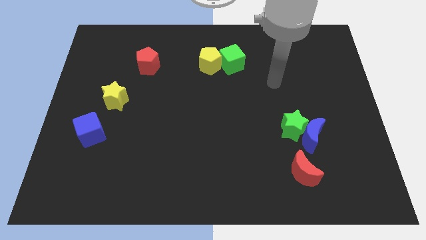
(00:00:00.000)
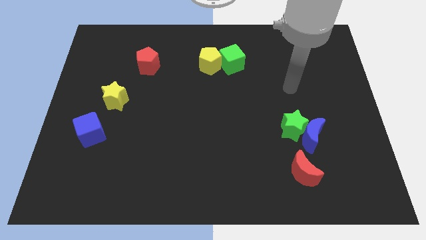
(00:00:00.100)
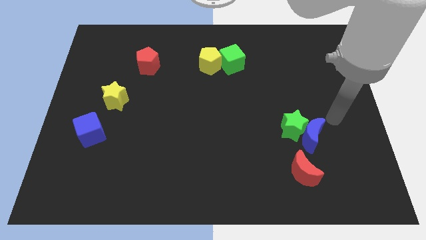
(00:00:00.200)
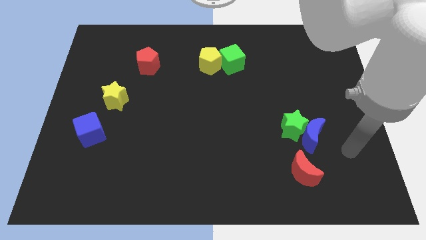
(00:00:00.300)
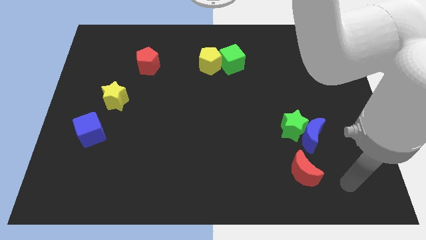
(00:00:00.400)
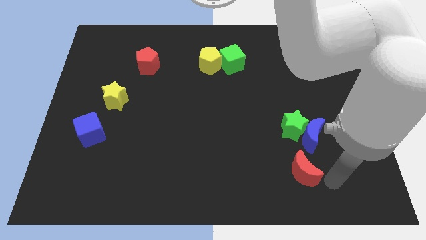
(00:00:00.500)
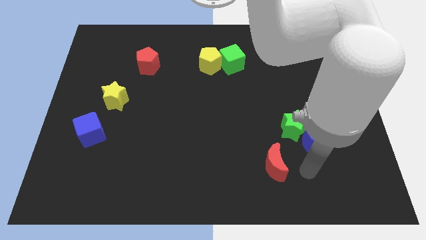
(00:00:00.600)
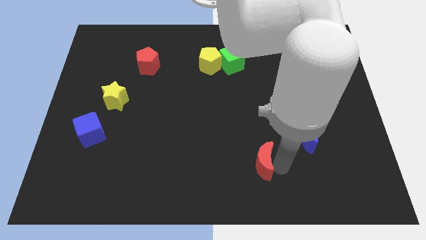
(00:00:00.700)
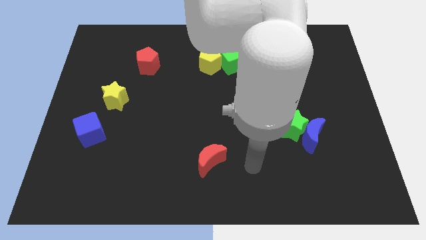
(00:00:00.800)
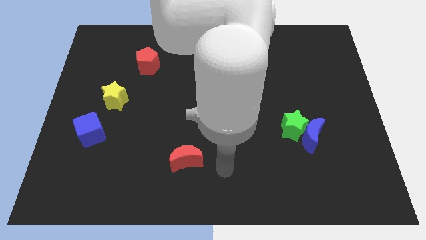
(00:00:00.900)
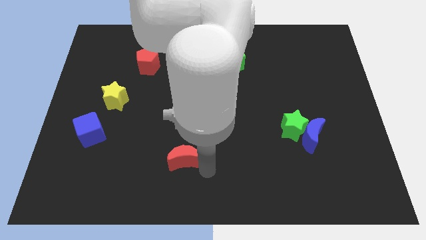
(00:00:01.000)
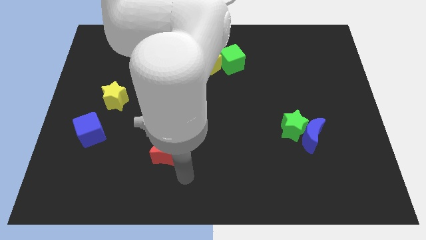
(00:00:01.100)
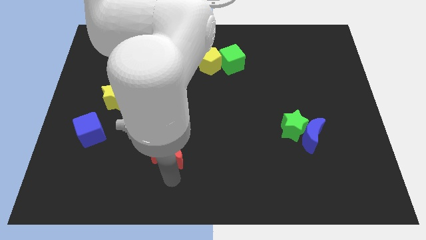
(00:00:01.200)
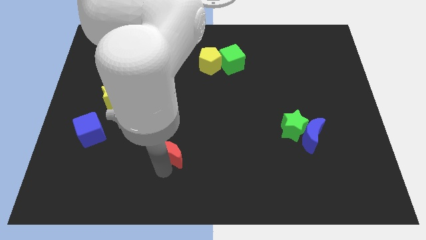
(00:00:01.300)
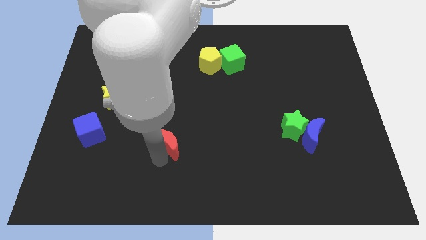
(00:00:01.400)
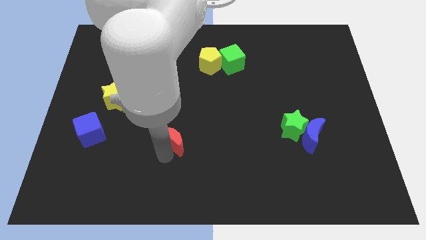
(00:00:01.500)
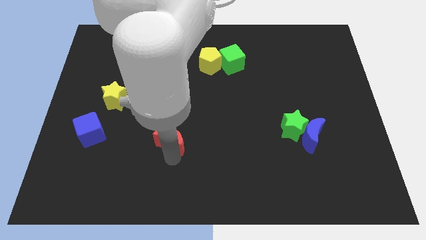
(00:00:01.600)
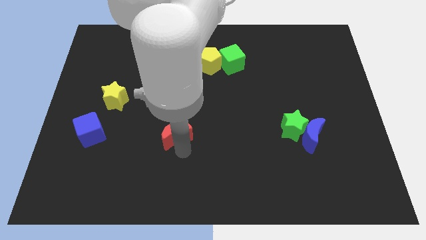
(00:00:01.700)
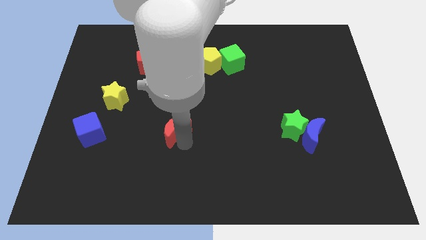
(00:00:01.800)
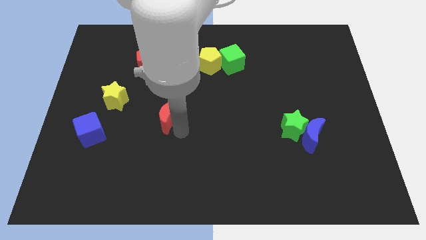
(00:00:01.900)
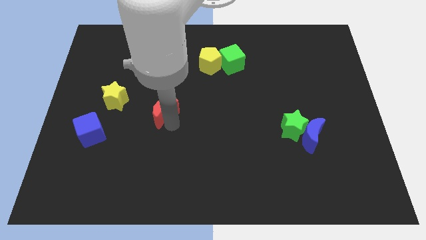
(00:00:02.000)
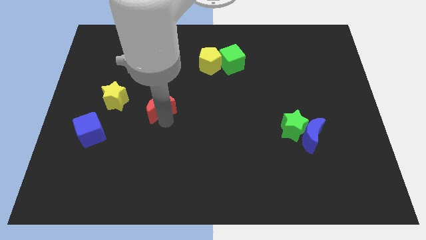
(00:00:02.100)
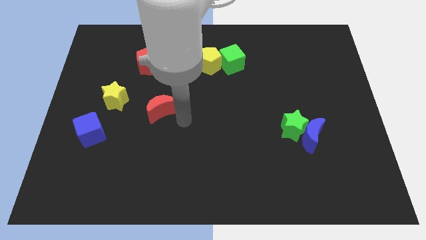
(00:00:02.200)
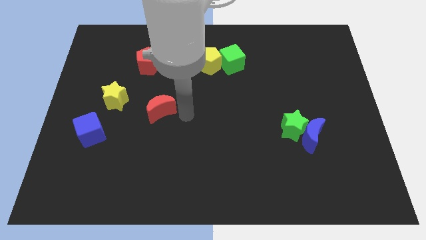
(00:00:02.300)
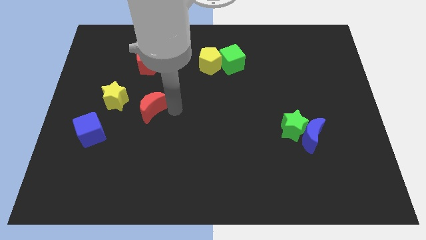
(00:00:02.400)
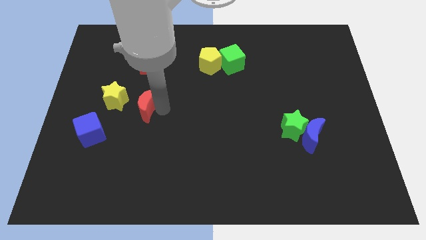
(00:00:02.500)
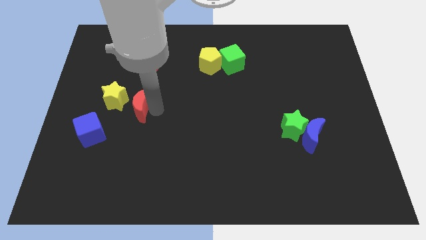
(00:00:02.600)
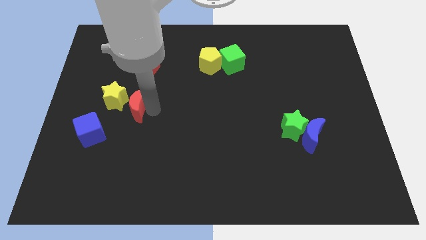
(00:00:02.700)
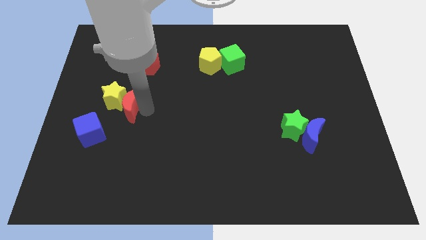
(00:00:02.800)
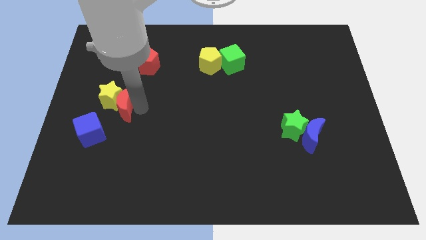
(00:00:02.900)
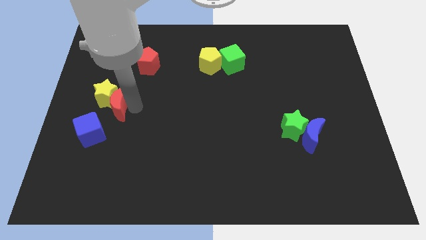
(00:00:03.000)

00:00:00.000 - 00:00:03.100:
put the red moon to the yellow star

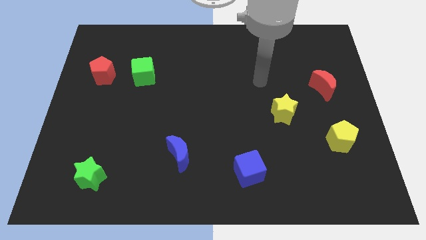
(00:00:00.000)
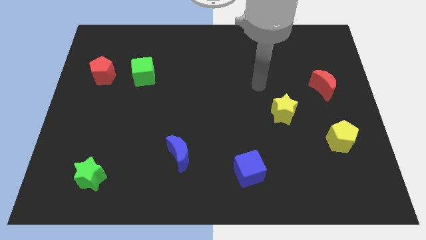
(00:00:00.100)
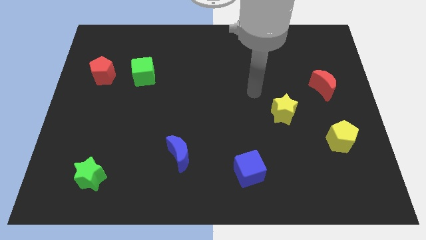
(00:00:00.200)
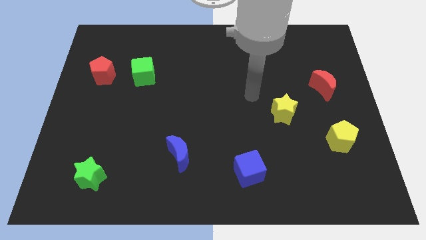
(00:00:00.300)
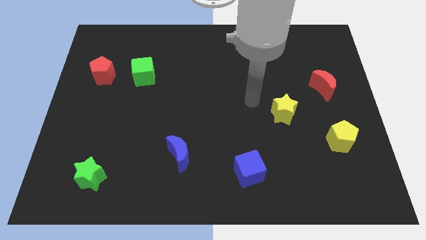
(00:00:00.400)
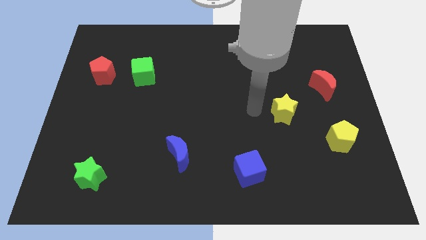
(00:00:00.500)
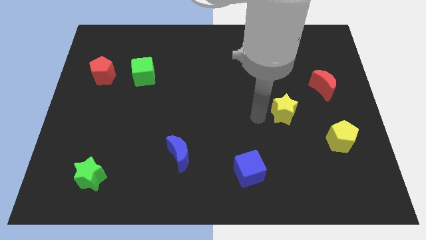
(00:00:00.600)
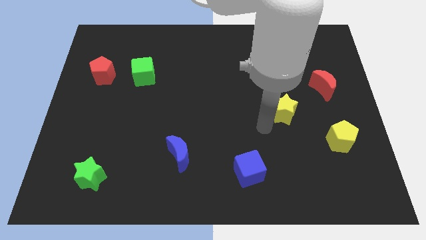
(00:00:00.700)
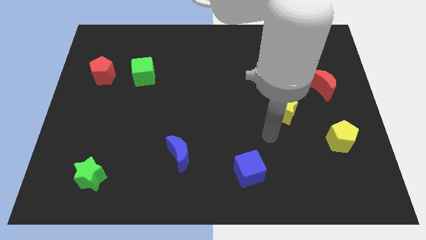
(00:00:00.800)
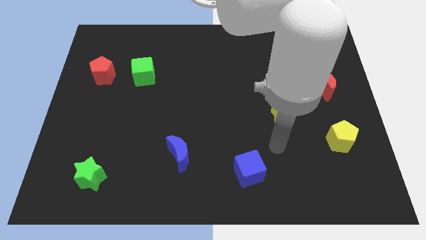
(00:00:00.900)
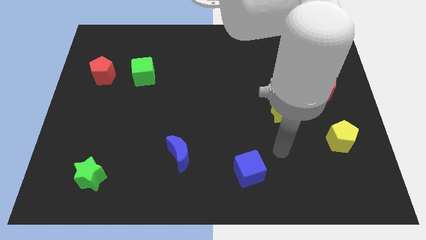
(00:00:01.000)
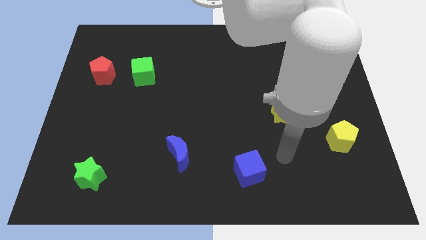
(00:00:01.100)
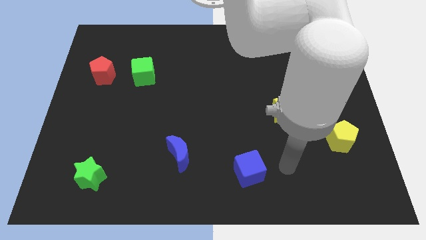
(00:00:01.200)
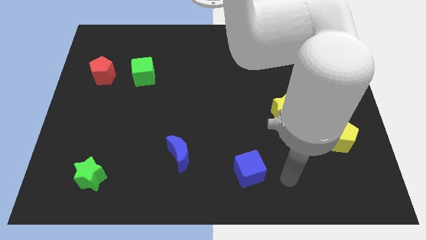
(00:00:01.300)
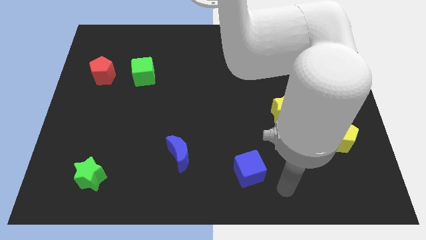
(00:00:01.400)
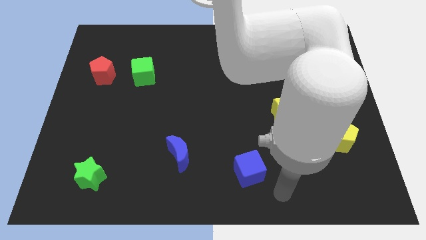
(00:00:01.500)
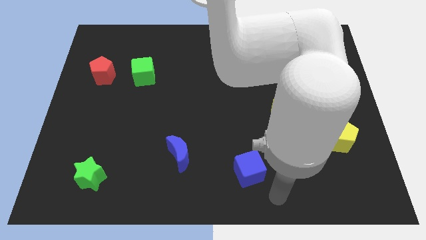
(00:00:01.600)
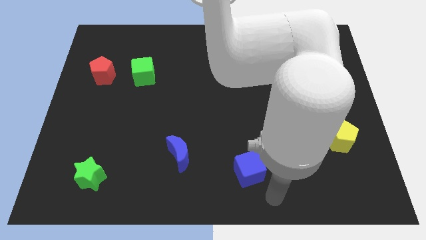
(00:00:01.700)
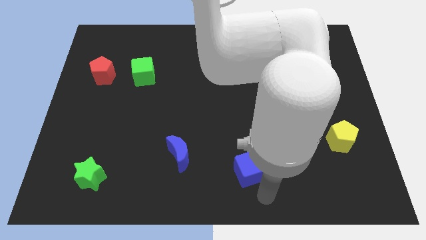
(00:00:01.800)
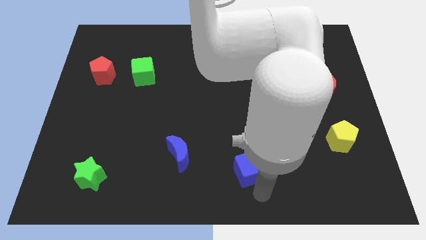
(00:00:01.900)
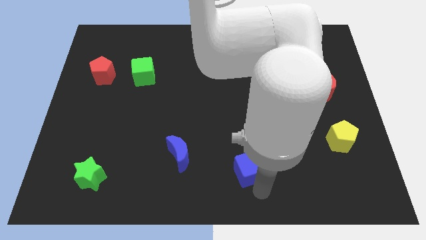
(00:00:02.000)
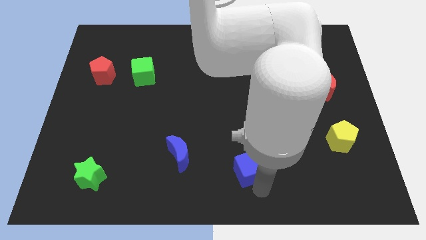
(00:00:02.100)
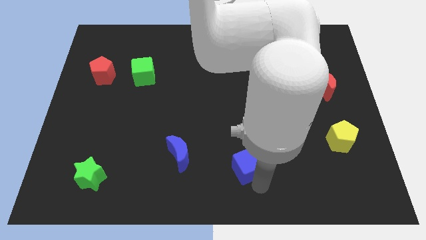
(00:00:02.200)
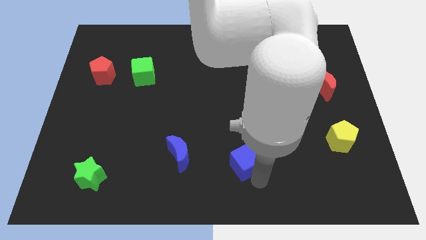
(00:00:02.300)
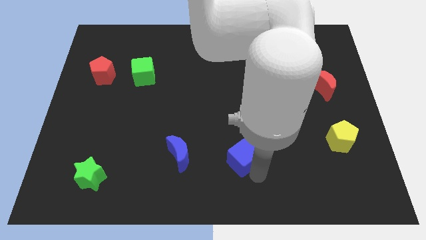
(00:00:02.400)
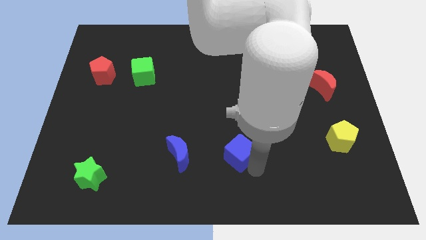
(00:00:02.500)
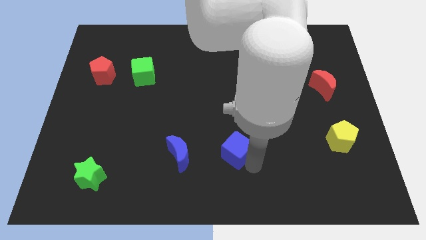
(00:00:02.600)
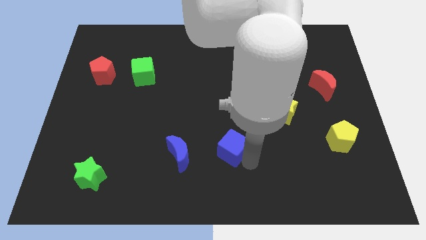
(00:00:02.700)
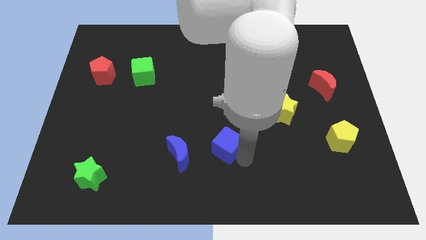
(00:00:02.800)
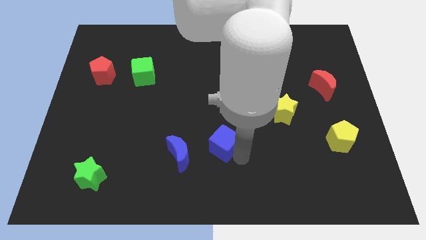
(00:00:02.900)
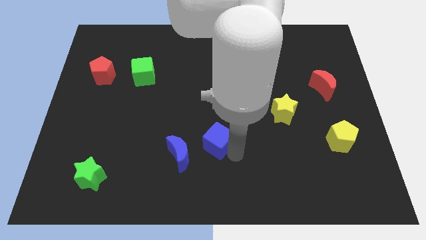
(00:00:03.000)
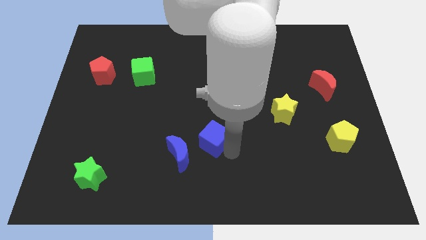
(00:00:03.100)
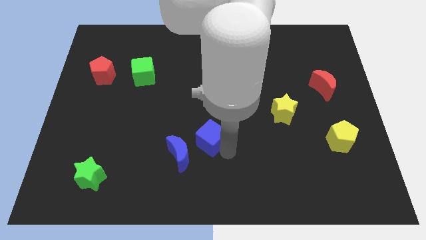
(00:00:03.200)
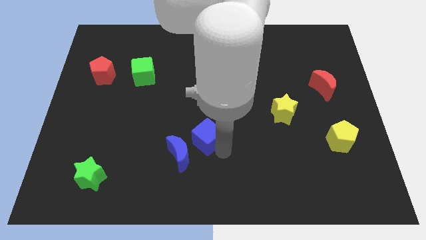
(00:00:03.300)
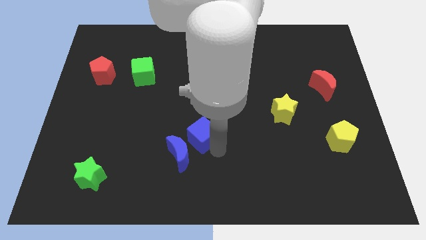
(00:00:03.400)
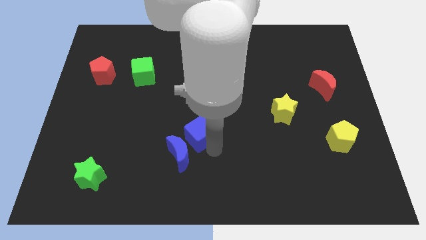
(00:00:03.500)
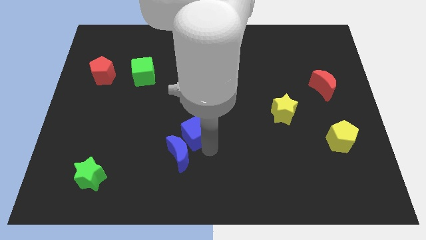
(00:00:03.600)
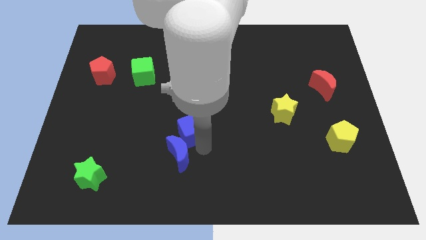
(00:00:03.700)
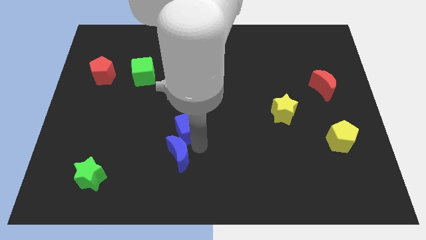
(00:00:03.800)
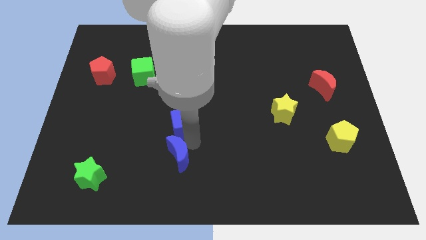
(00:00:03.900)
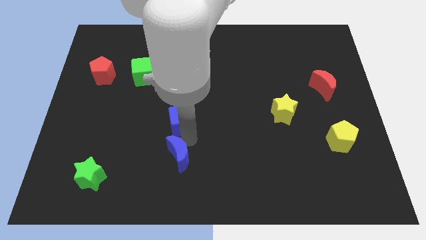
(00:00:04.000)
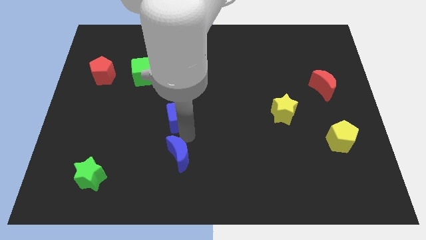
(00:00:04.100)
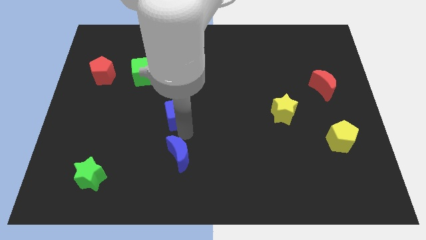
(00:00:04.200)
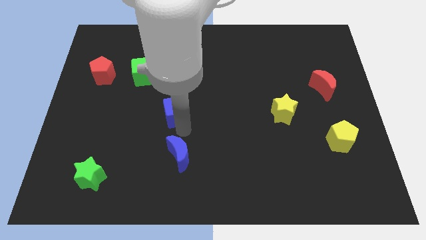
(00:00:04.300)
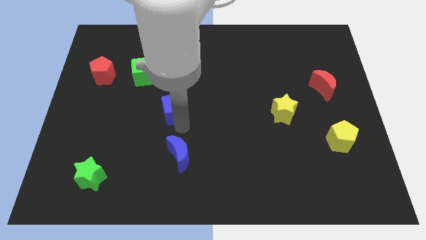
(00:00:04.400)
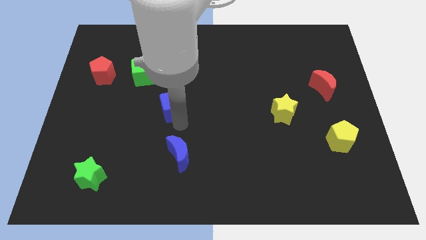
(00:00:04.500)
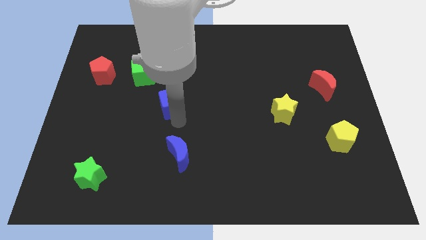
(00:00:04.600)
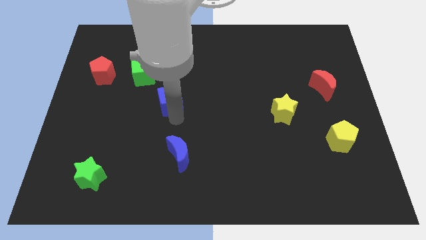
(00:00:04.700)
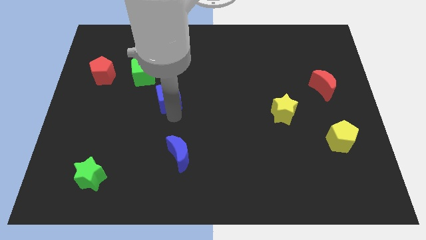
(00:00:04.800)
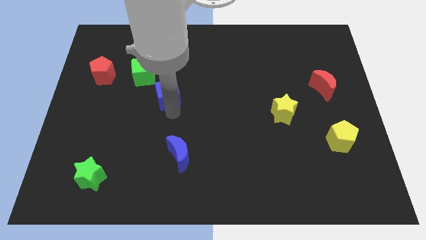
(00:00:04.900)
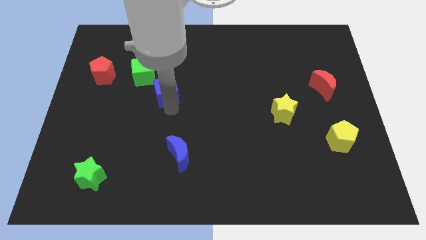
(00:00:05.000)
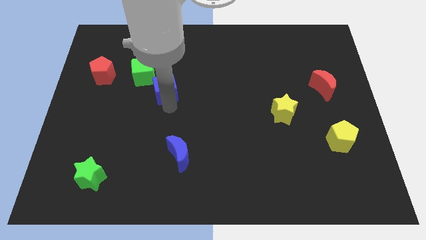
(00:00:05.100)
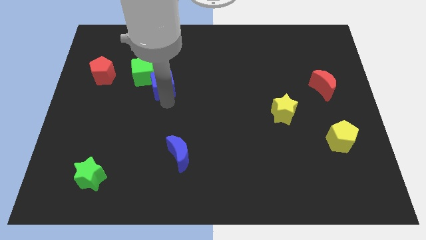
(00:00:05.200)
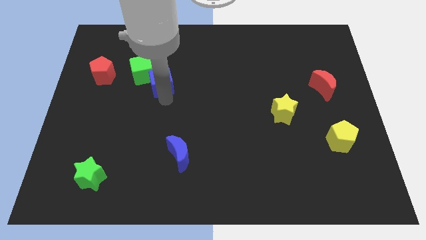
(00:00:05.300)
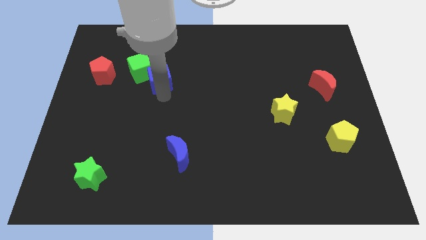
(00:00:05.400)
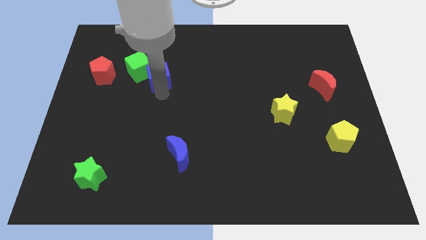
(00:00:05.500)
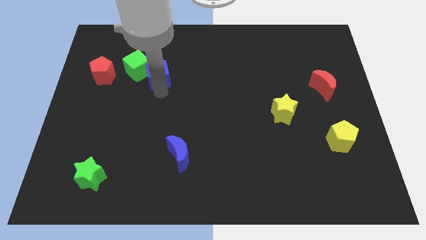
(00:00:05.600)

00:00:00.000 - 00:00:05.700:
put the blue cube towards the green cube
